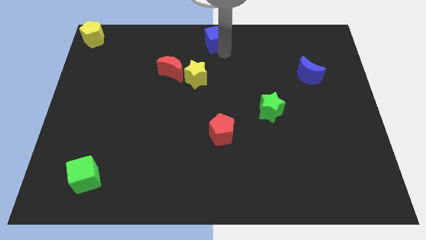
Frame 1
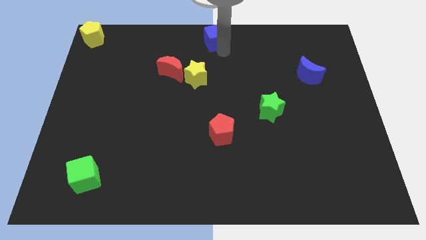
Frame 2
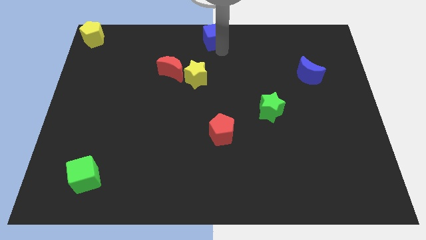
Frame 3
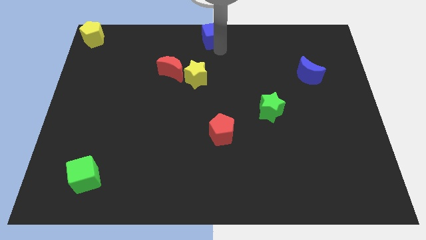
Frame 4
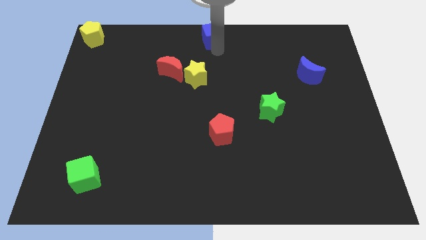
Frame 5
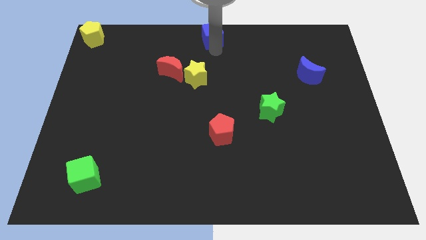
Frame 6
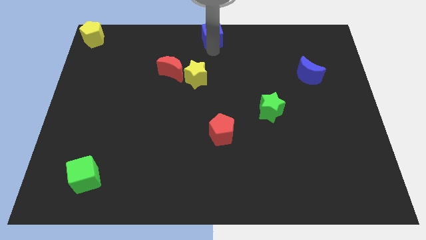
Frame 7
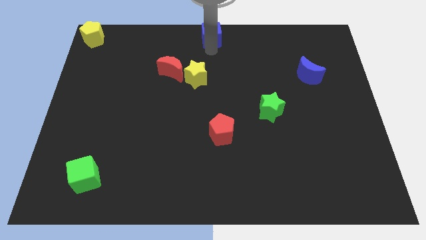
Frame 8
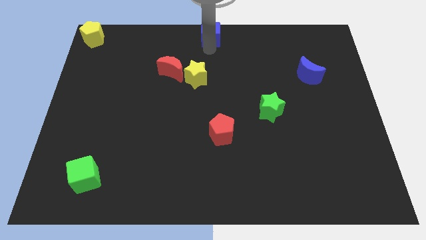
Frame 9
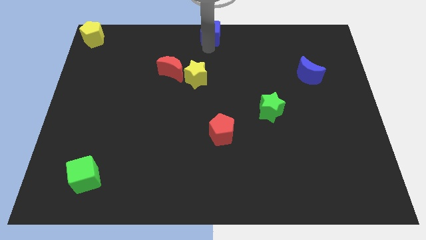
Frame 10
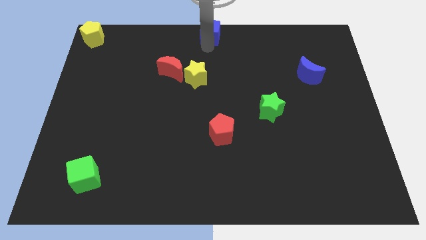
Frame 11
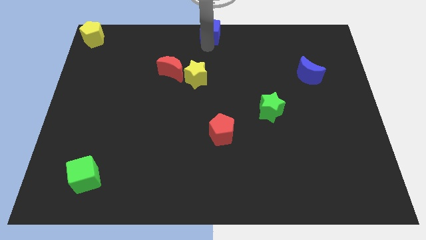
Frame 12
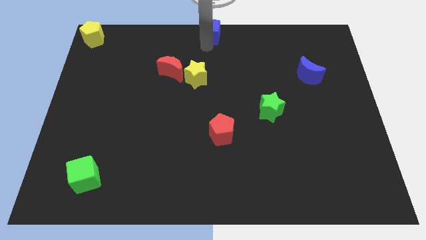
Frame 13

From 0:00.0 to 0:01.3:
move blue moon to the top center of the board

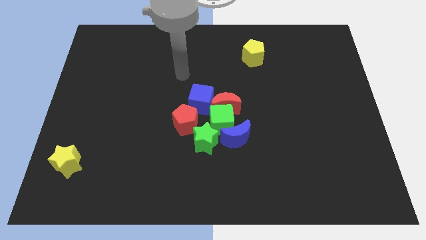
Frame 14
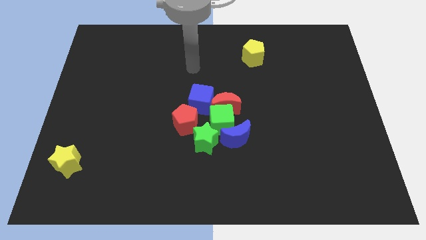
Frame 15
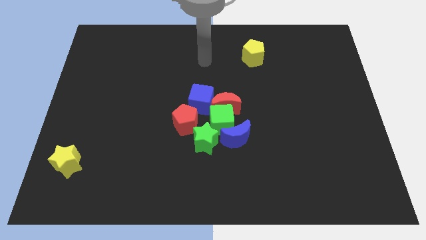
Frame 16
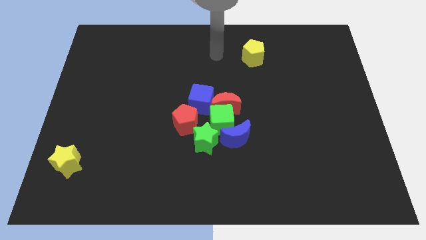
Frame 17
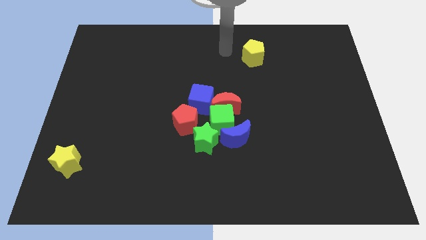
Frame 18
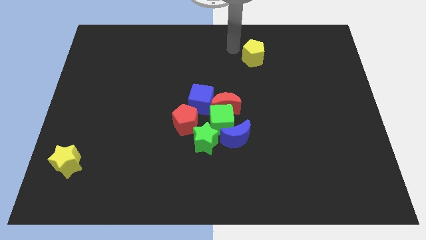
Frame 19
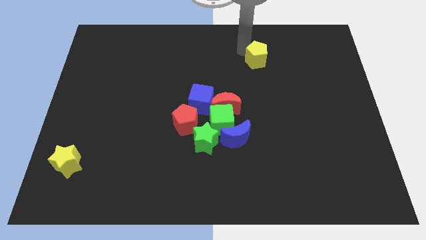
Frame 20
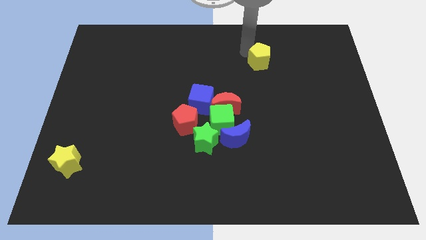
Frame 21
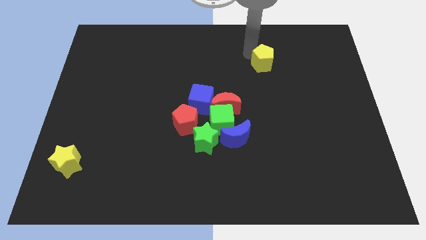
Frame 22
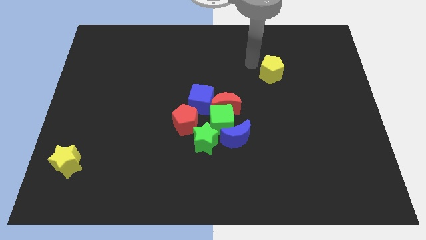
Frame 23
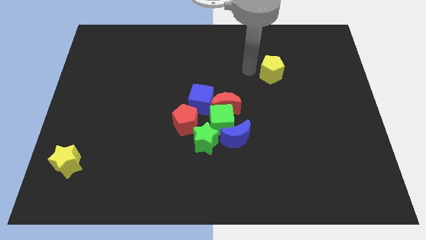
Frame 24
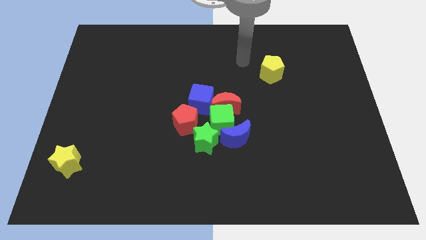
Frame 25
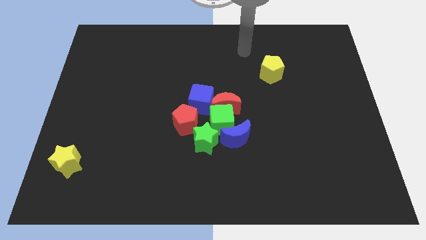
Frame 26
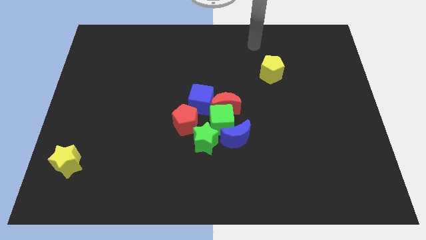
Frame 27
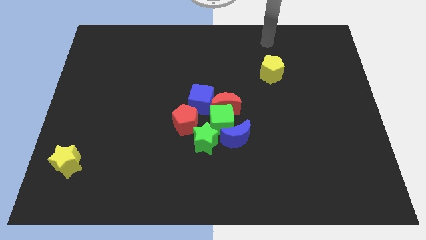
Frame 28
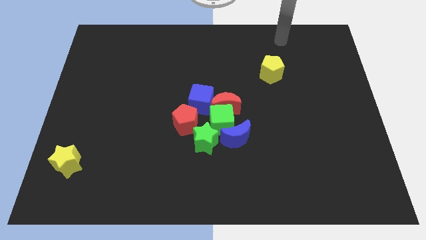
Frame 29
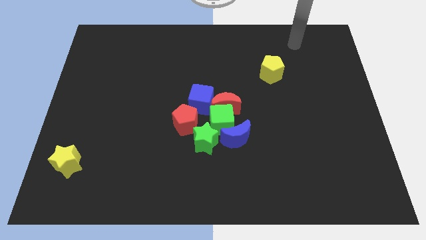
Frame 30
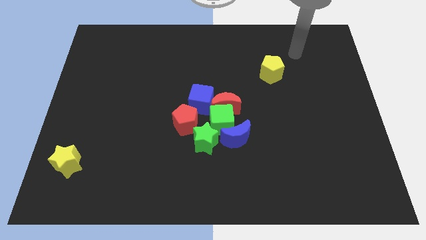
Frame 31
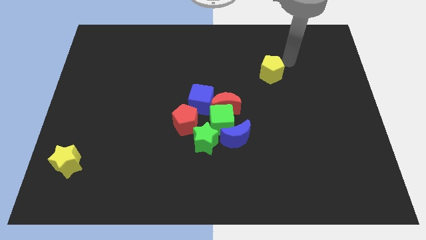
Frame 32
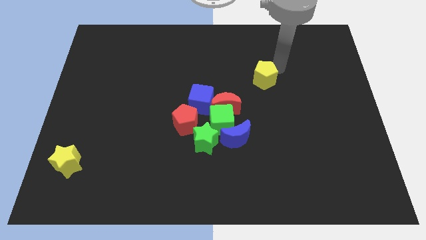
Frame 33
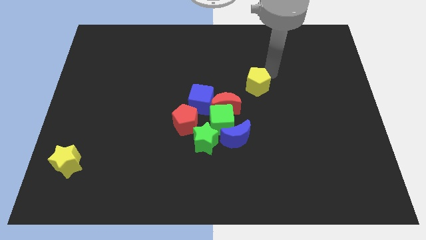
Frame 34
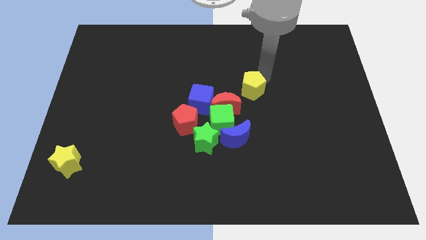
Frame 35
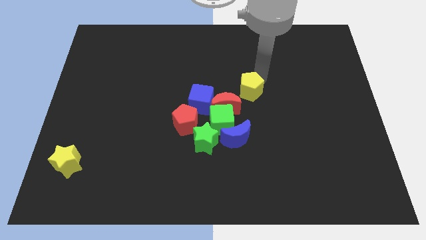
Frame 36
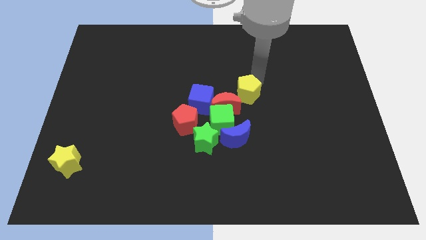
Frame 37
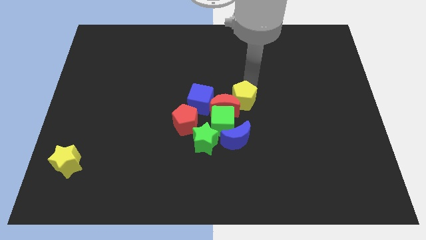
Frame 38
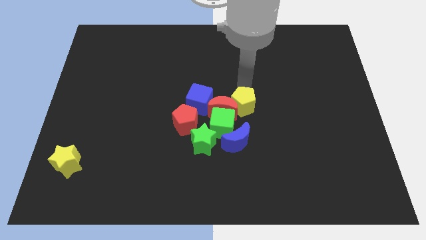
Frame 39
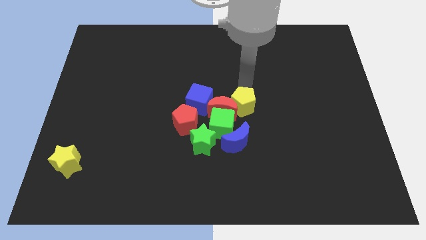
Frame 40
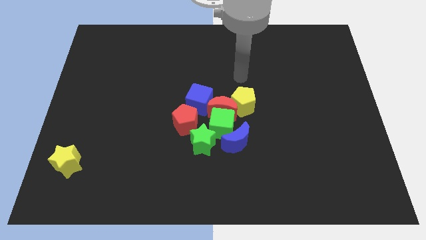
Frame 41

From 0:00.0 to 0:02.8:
push the yellow pentagon to the right of the red crescent

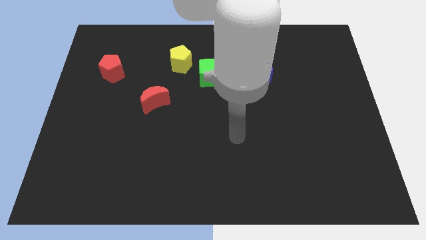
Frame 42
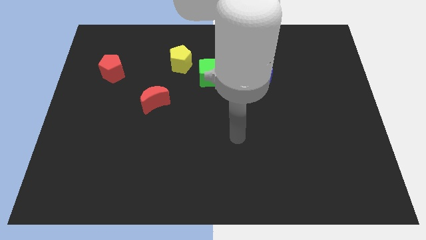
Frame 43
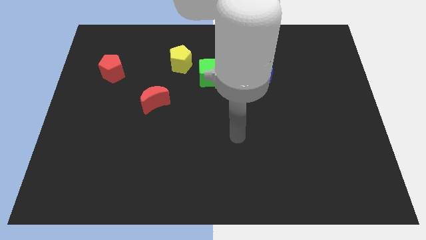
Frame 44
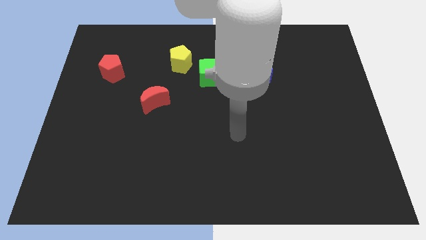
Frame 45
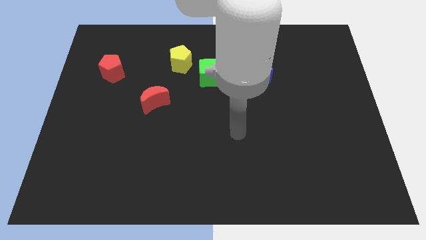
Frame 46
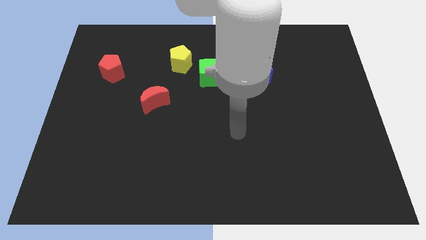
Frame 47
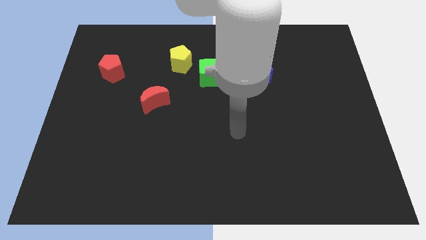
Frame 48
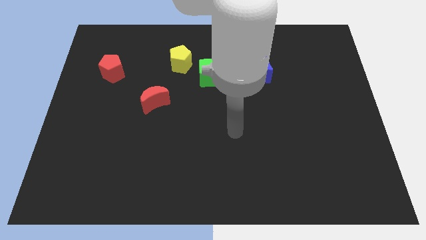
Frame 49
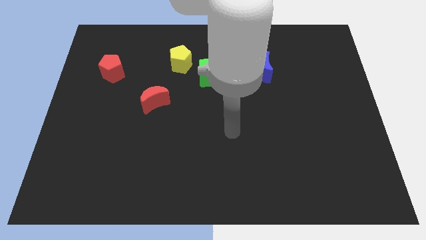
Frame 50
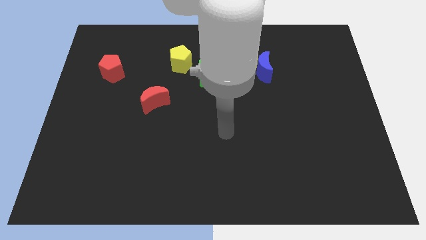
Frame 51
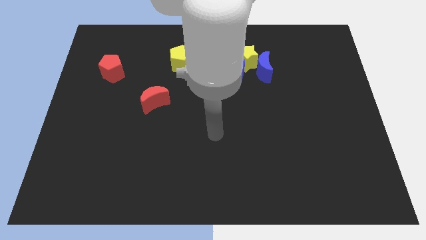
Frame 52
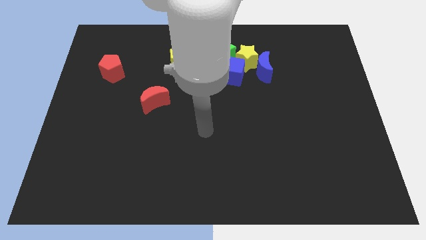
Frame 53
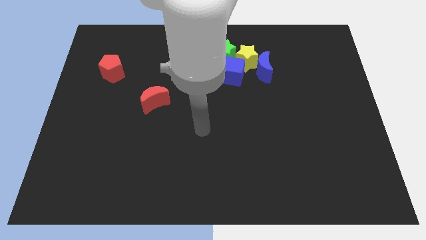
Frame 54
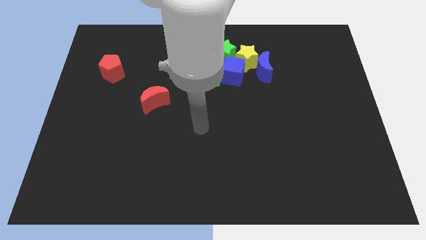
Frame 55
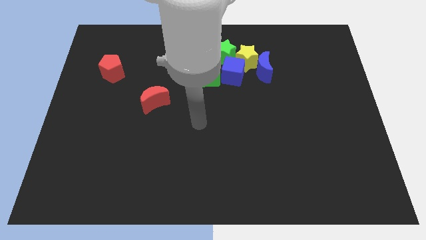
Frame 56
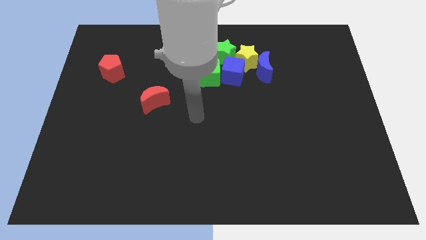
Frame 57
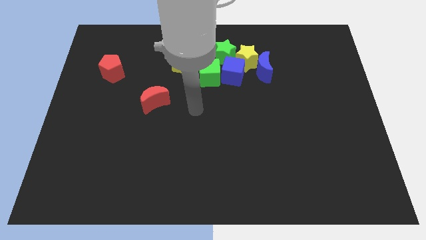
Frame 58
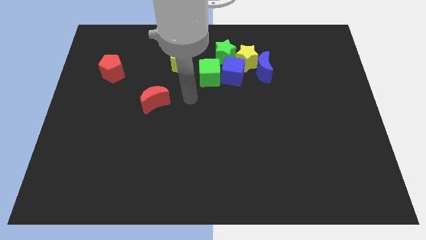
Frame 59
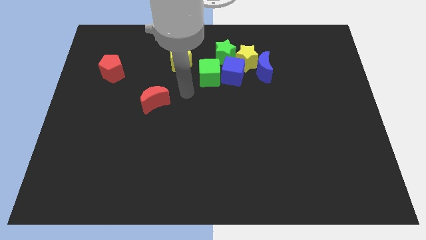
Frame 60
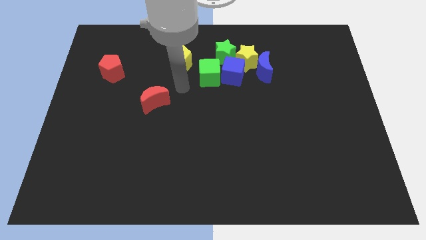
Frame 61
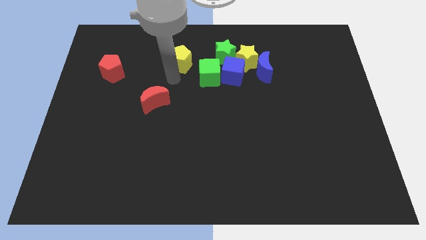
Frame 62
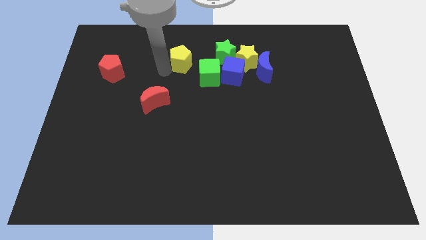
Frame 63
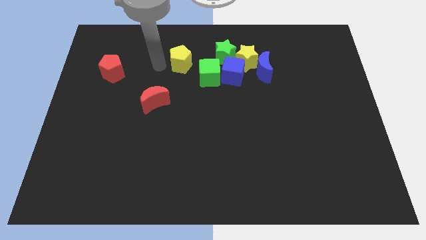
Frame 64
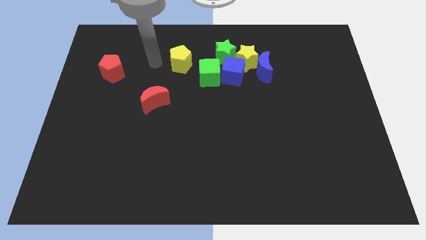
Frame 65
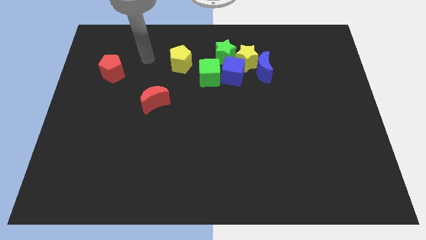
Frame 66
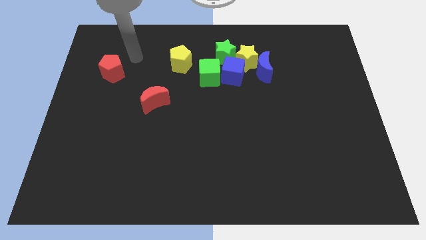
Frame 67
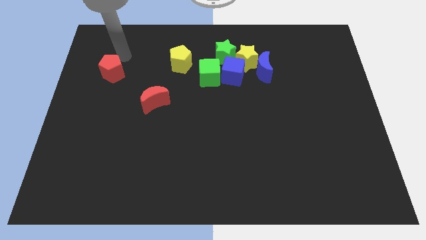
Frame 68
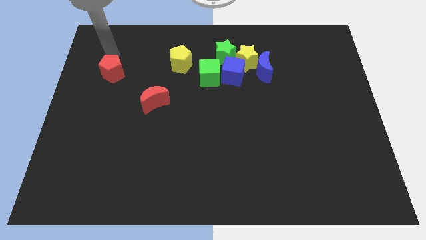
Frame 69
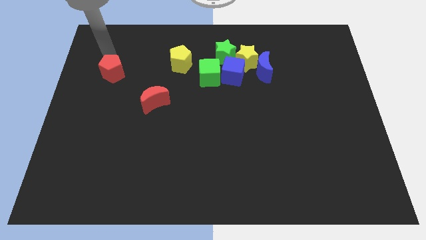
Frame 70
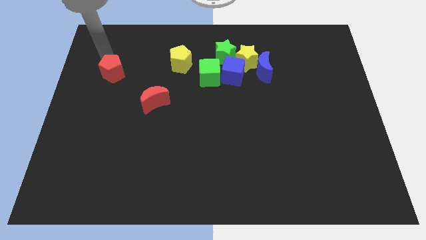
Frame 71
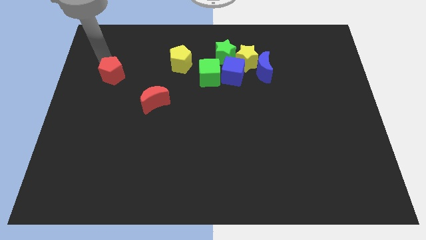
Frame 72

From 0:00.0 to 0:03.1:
slightly move the top side of the red pentagon

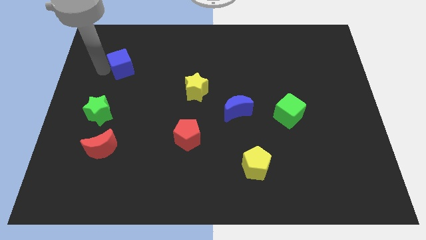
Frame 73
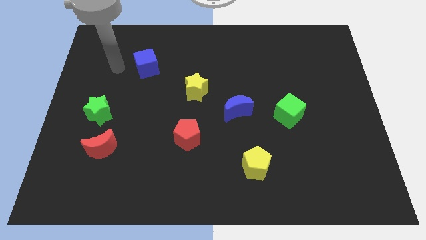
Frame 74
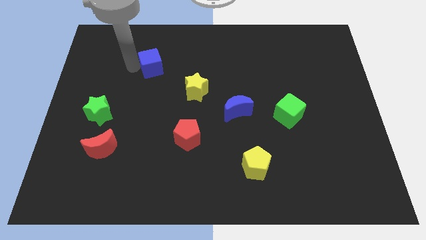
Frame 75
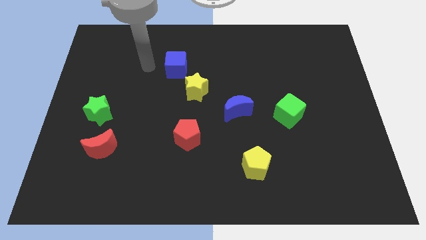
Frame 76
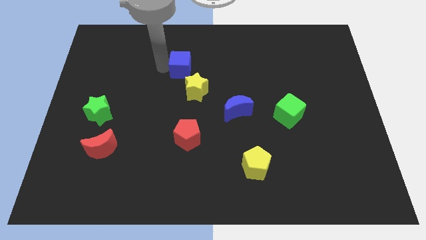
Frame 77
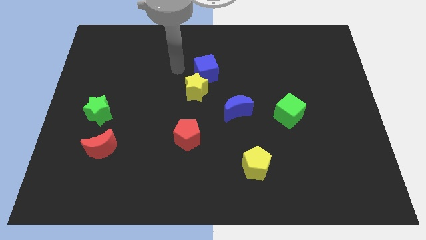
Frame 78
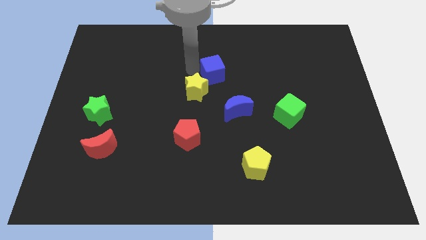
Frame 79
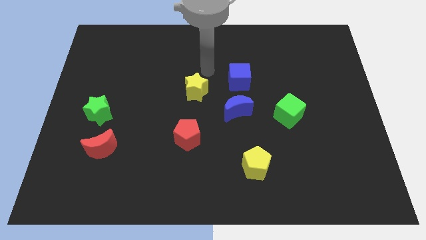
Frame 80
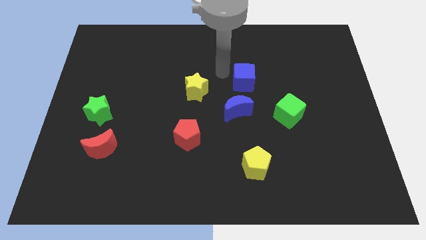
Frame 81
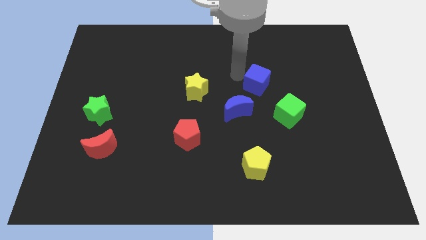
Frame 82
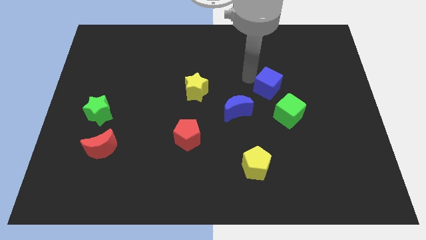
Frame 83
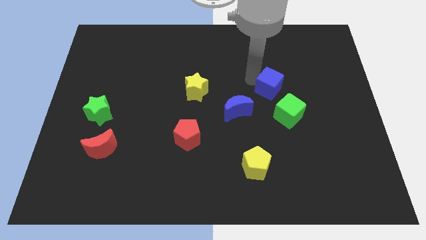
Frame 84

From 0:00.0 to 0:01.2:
move the blue cube into the green cube

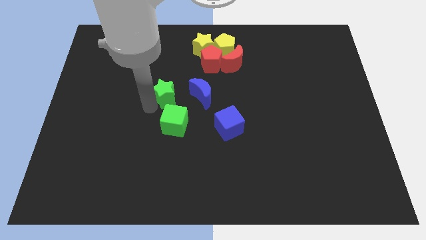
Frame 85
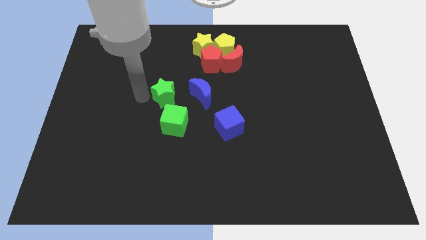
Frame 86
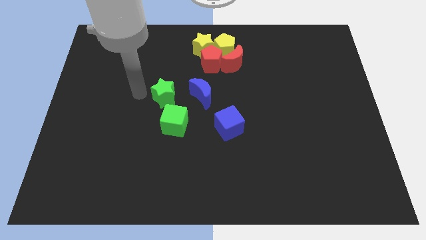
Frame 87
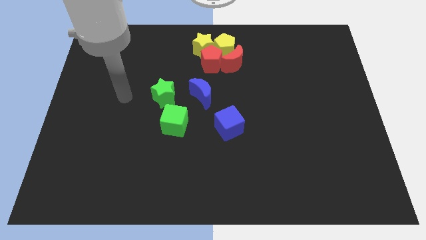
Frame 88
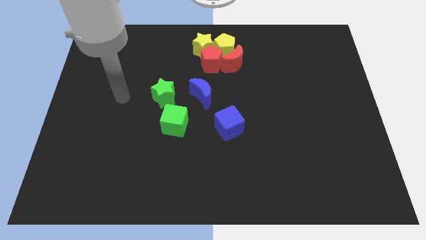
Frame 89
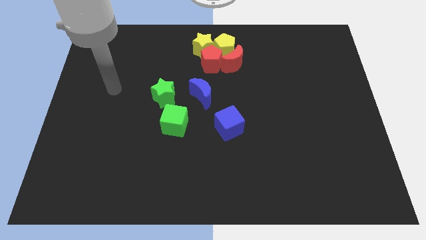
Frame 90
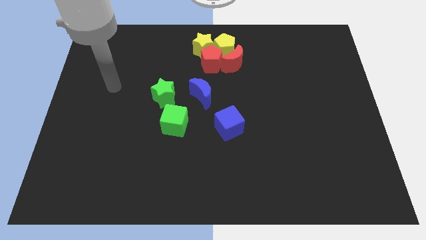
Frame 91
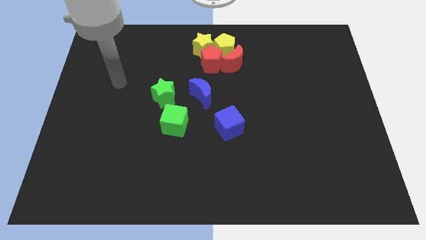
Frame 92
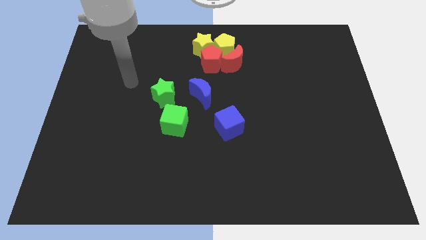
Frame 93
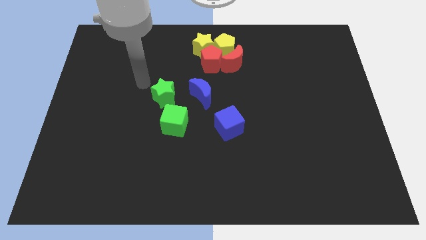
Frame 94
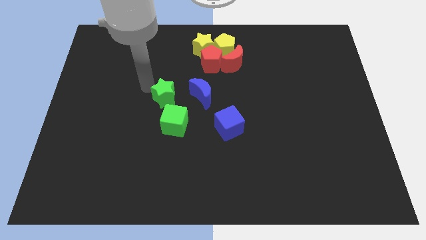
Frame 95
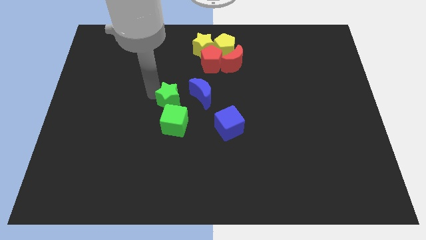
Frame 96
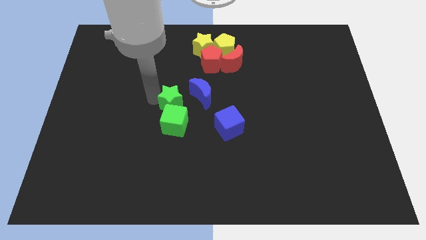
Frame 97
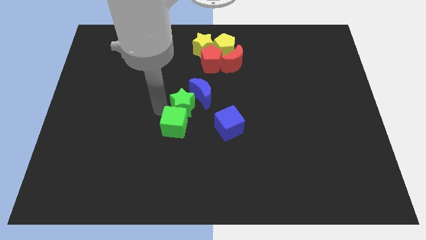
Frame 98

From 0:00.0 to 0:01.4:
move the green star on the top of the green cube on the board
